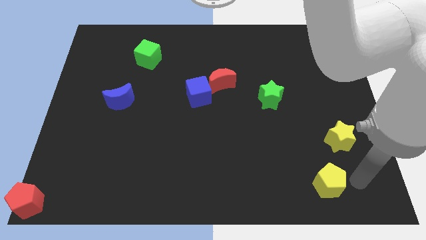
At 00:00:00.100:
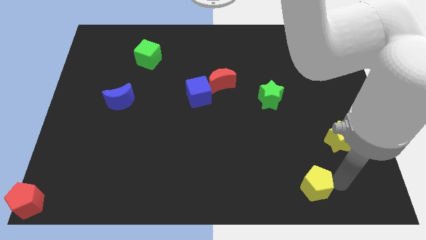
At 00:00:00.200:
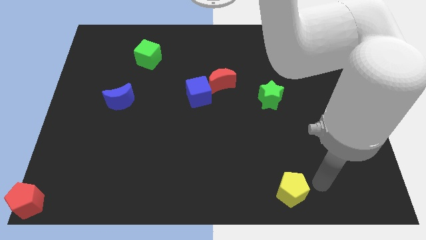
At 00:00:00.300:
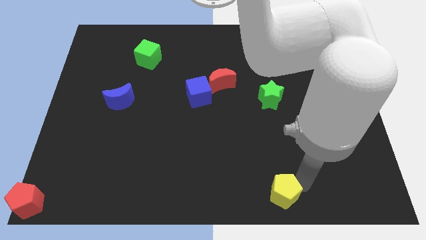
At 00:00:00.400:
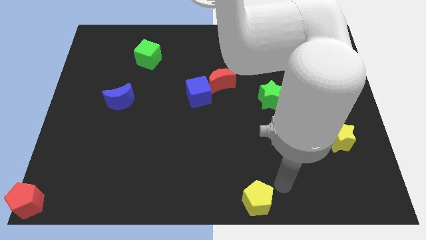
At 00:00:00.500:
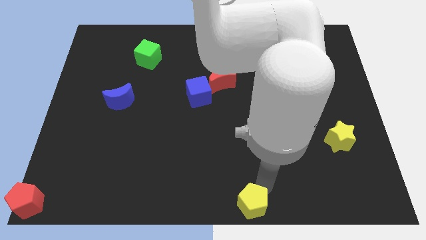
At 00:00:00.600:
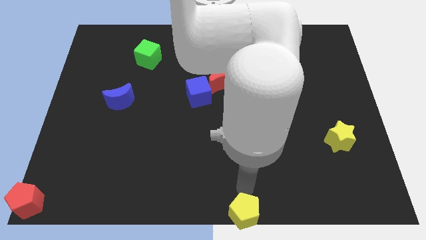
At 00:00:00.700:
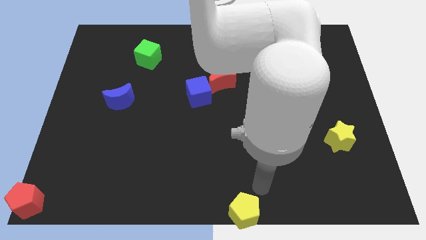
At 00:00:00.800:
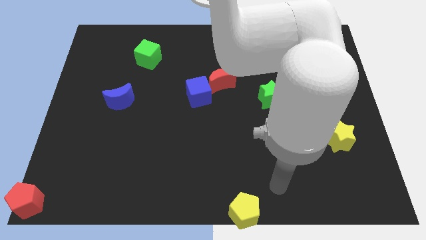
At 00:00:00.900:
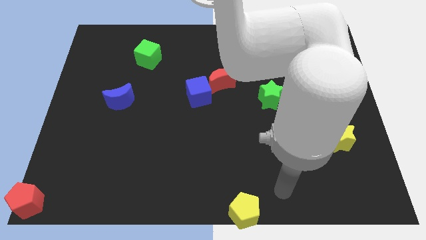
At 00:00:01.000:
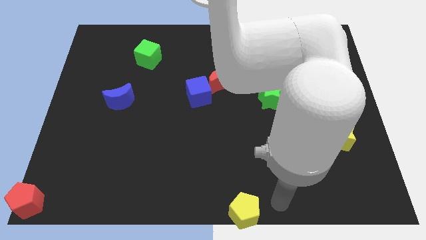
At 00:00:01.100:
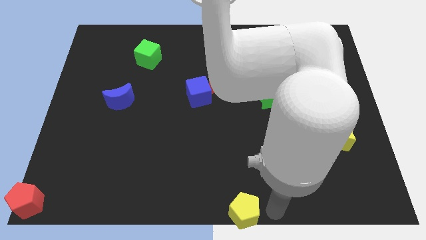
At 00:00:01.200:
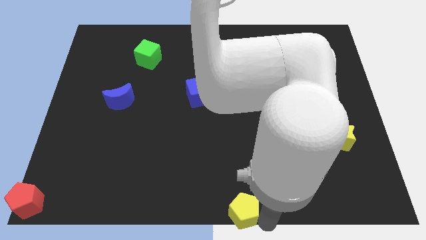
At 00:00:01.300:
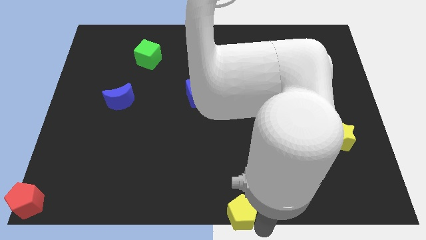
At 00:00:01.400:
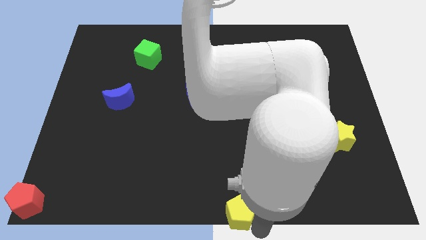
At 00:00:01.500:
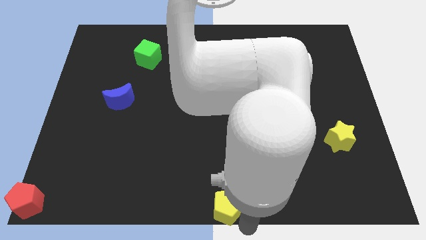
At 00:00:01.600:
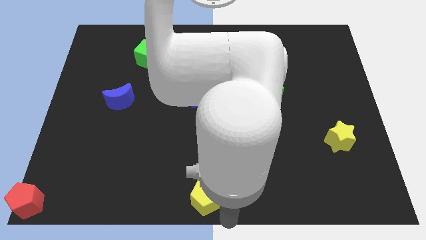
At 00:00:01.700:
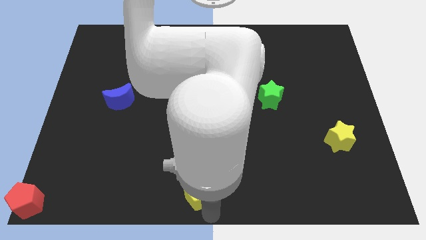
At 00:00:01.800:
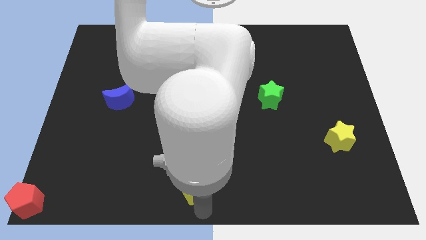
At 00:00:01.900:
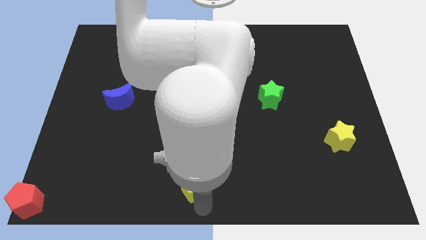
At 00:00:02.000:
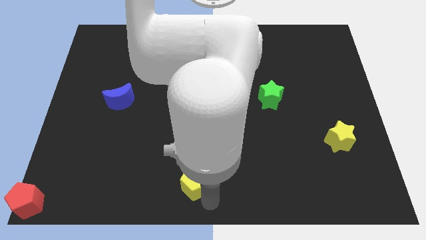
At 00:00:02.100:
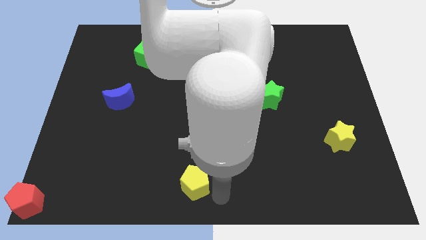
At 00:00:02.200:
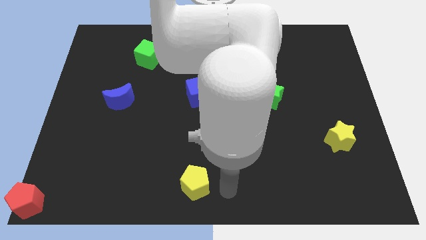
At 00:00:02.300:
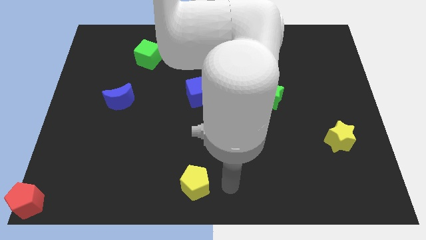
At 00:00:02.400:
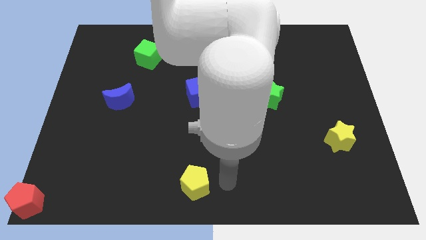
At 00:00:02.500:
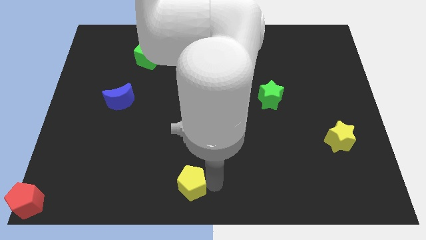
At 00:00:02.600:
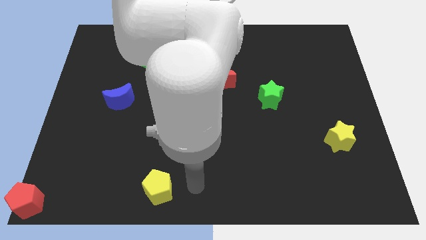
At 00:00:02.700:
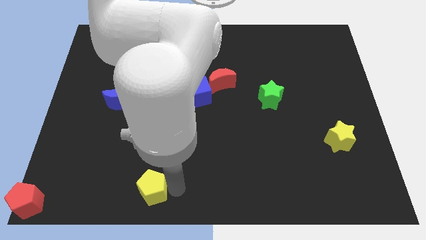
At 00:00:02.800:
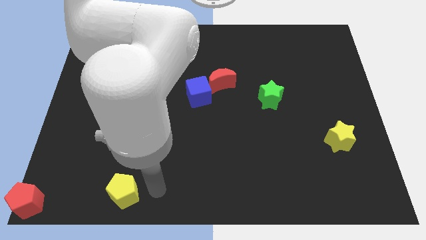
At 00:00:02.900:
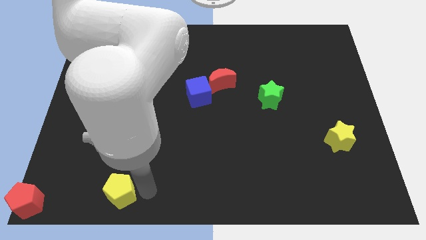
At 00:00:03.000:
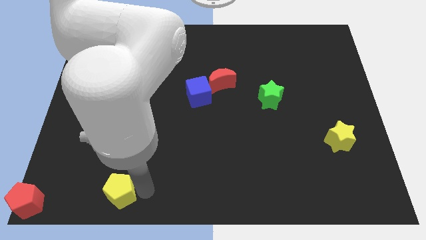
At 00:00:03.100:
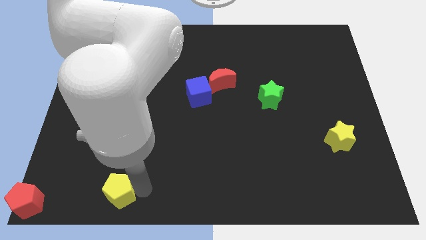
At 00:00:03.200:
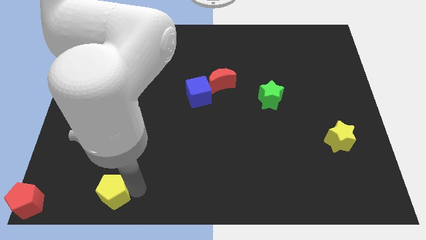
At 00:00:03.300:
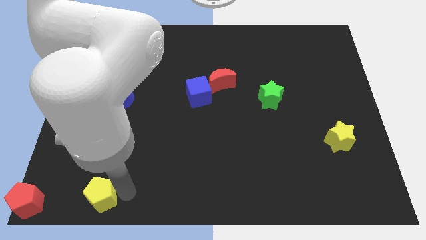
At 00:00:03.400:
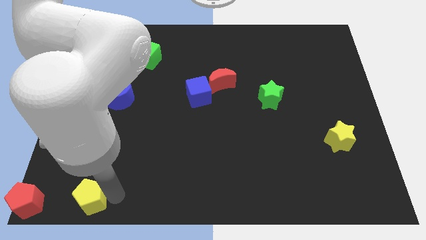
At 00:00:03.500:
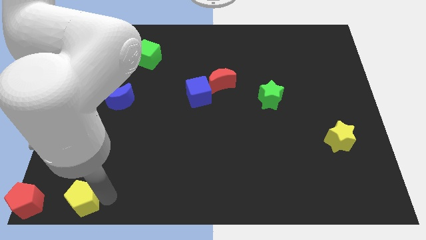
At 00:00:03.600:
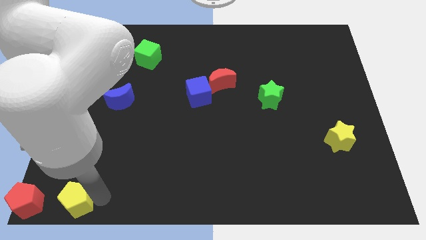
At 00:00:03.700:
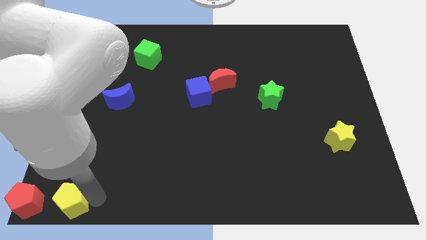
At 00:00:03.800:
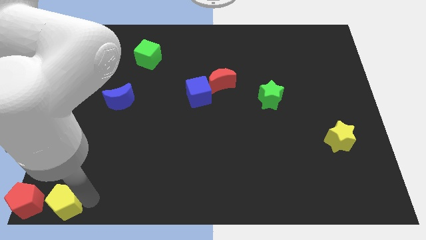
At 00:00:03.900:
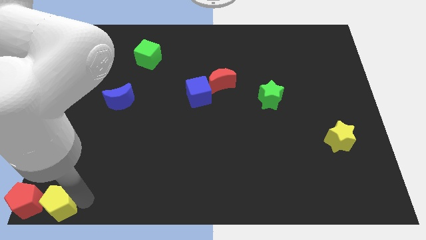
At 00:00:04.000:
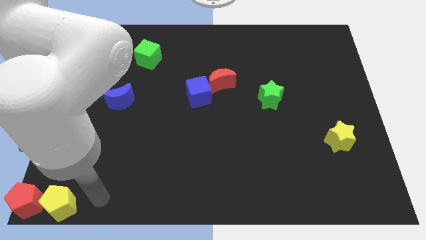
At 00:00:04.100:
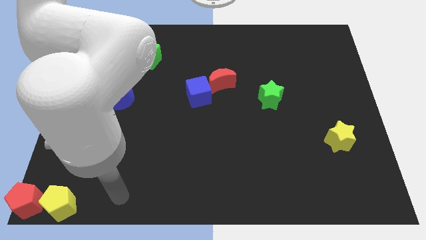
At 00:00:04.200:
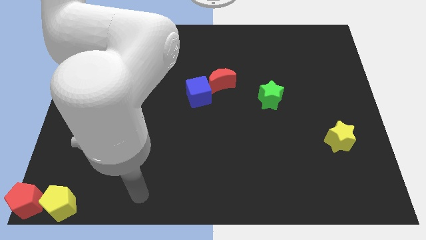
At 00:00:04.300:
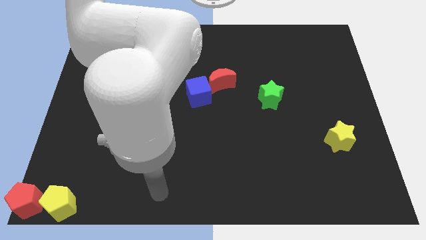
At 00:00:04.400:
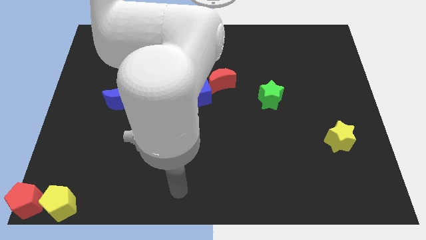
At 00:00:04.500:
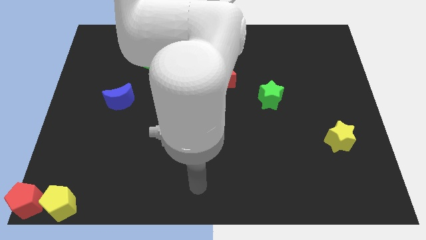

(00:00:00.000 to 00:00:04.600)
push the yellow pentagon to the bottom left corner

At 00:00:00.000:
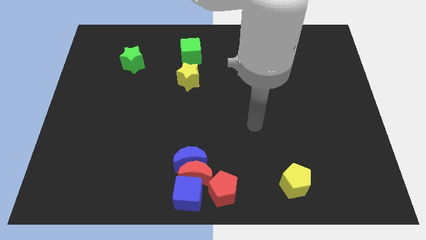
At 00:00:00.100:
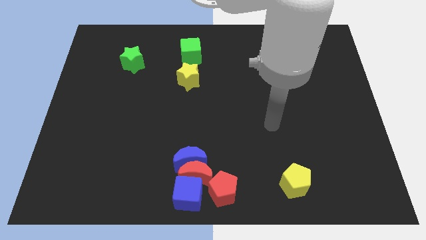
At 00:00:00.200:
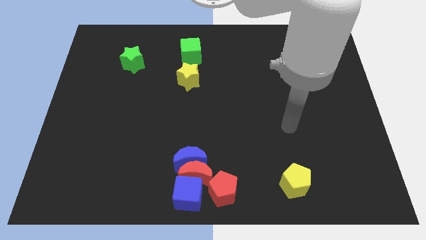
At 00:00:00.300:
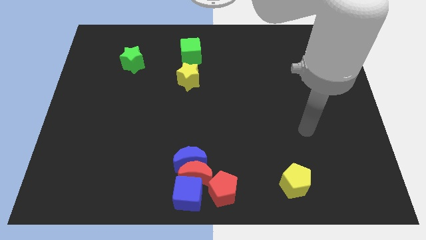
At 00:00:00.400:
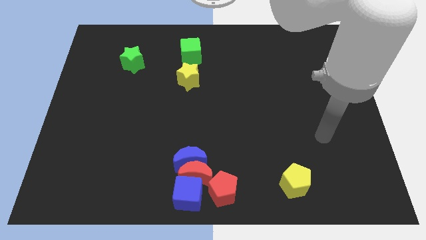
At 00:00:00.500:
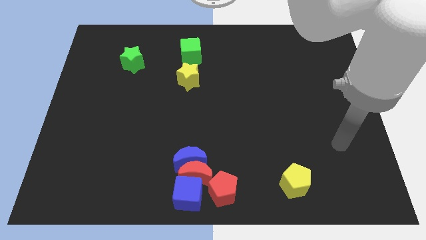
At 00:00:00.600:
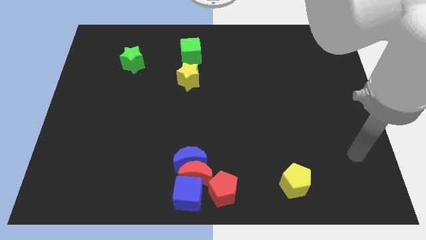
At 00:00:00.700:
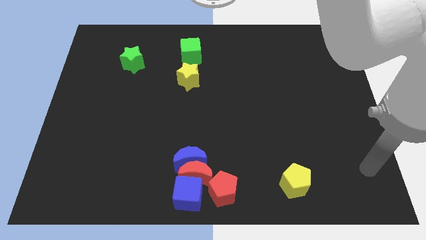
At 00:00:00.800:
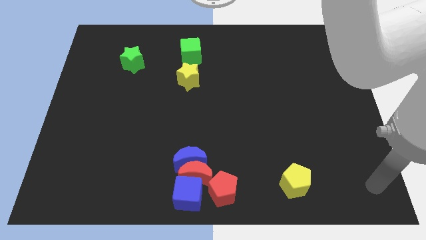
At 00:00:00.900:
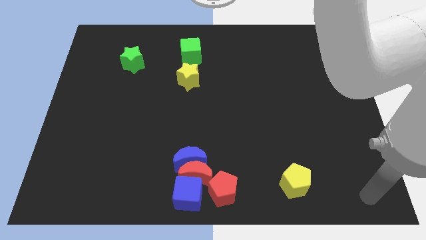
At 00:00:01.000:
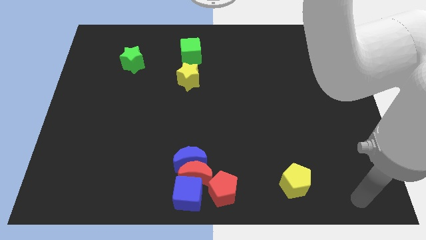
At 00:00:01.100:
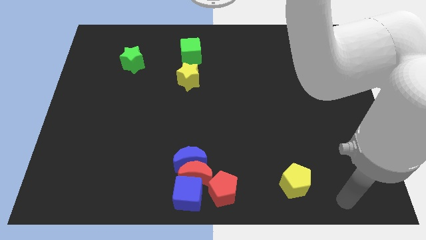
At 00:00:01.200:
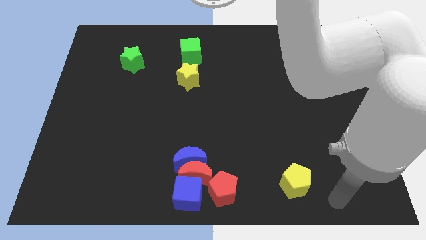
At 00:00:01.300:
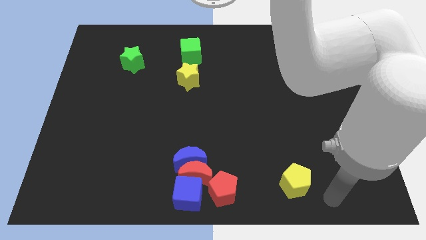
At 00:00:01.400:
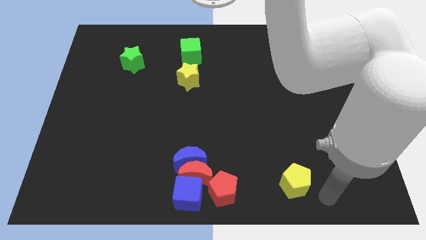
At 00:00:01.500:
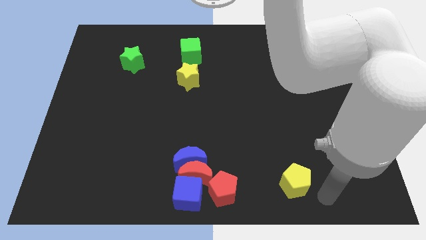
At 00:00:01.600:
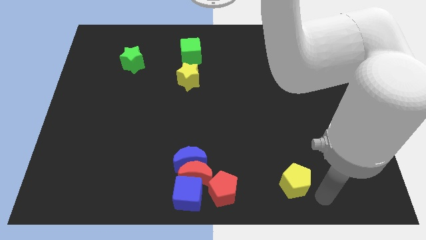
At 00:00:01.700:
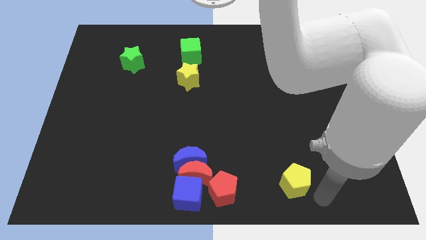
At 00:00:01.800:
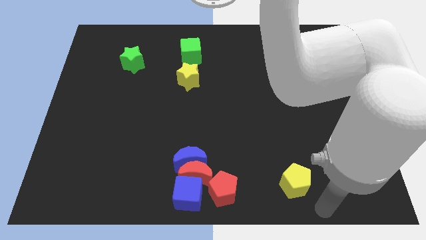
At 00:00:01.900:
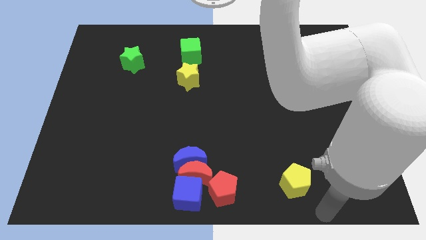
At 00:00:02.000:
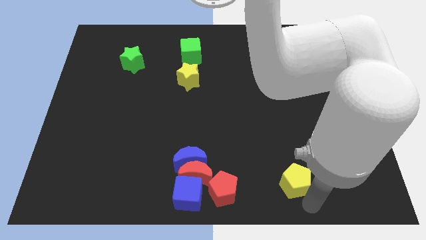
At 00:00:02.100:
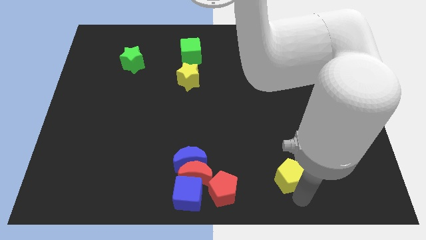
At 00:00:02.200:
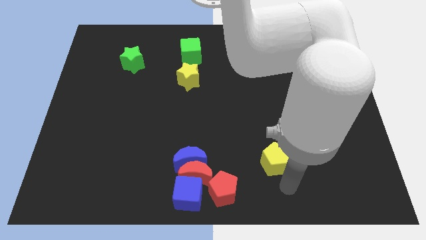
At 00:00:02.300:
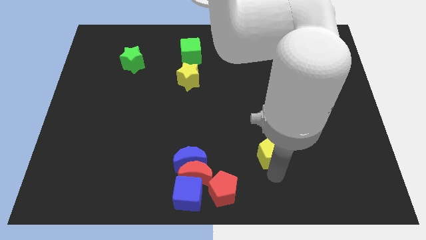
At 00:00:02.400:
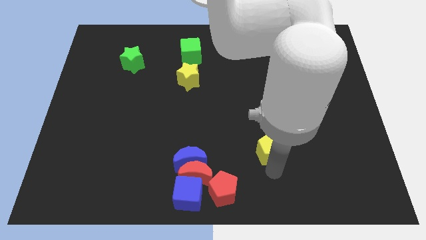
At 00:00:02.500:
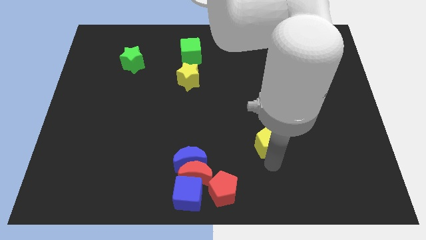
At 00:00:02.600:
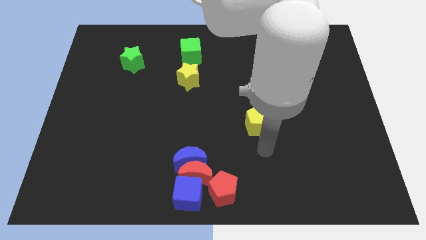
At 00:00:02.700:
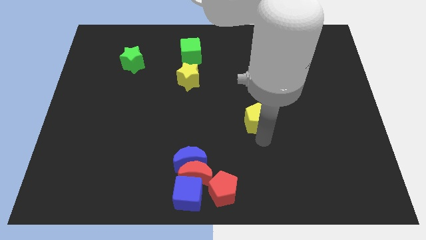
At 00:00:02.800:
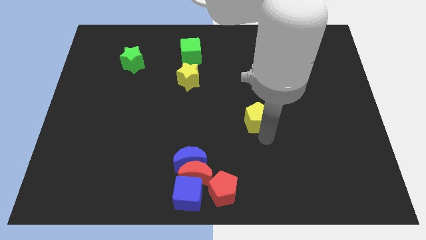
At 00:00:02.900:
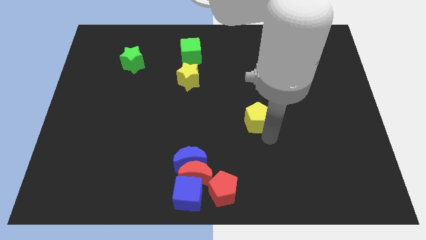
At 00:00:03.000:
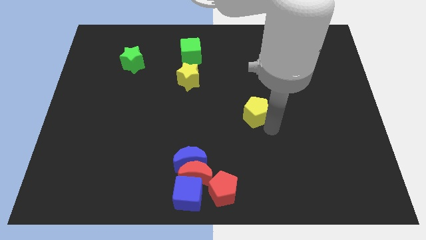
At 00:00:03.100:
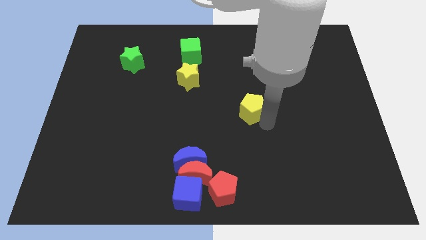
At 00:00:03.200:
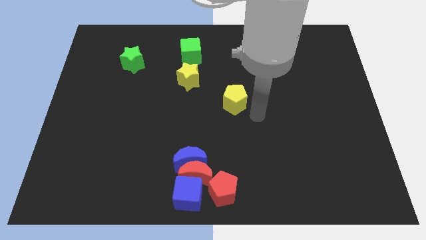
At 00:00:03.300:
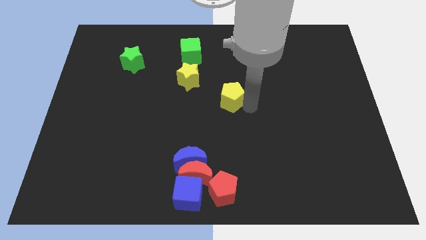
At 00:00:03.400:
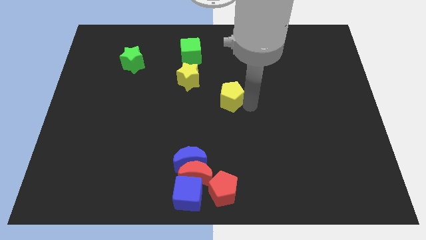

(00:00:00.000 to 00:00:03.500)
move the yellow pentagon towards yellow star

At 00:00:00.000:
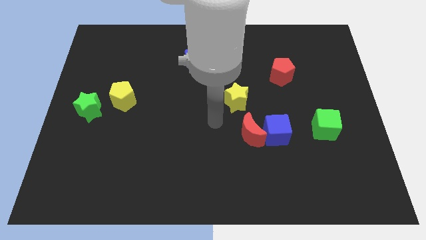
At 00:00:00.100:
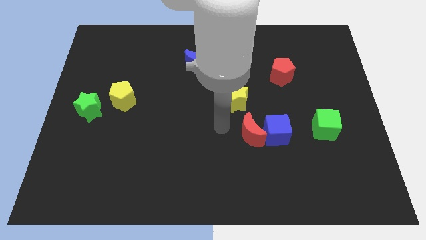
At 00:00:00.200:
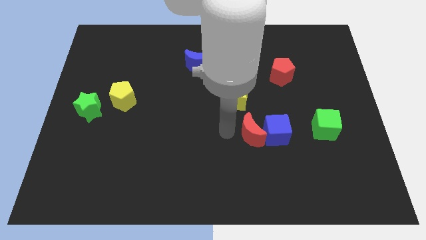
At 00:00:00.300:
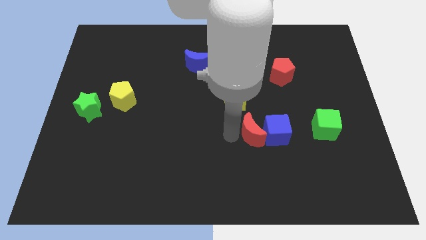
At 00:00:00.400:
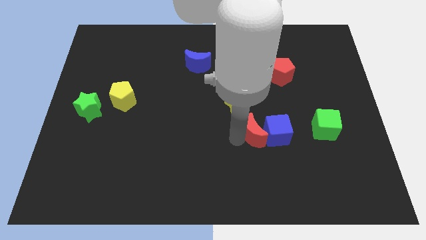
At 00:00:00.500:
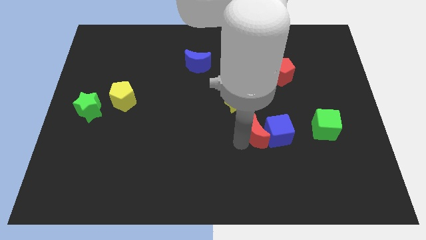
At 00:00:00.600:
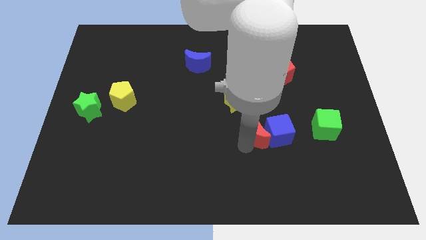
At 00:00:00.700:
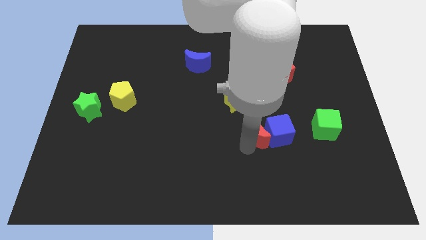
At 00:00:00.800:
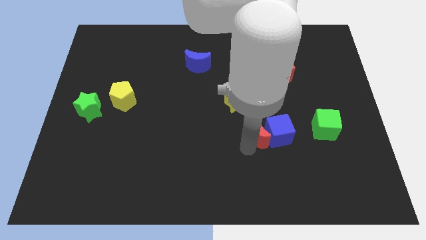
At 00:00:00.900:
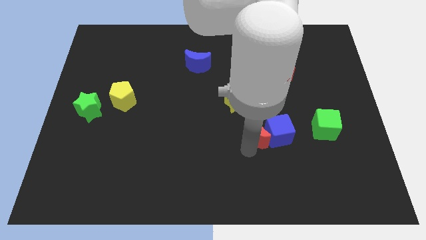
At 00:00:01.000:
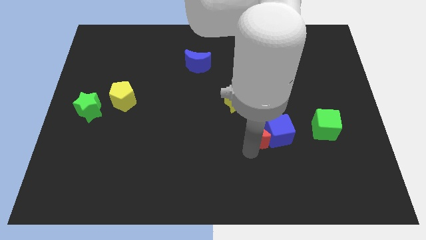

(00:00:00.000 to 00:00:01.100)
place your arm below red moon
